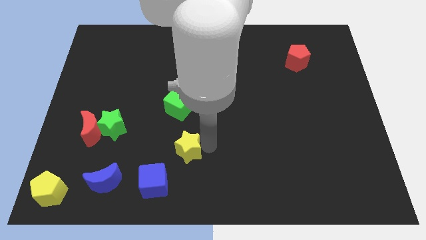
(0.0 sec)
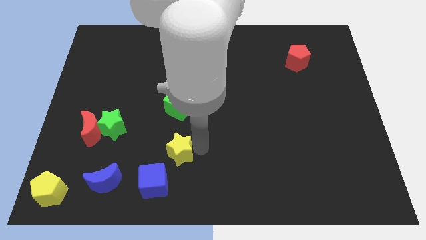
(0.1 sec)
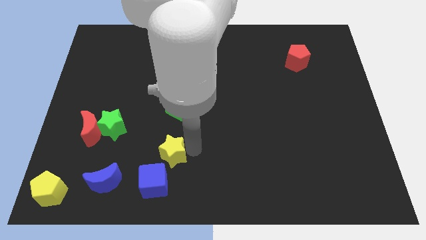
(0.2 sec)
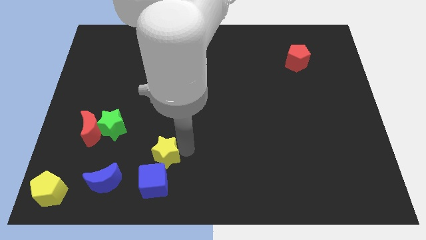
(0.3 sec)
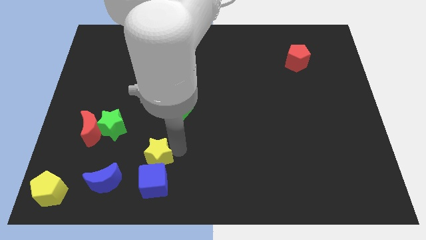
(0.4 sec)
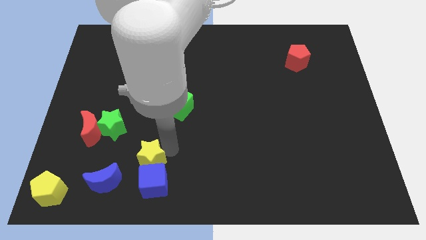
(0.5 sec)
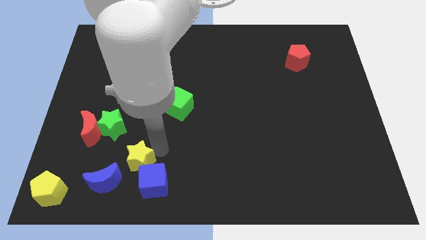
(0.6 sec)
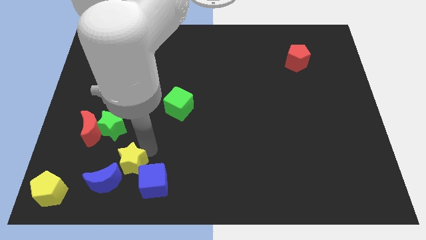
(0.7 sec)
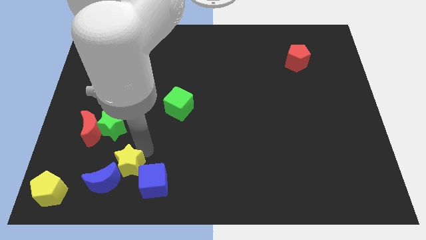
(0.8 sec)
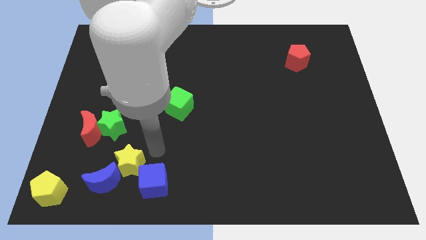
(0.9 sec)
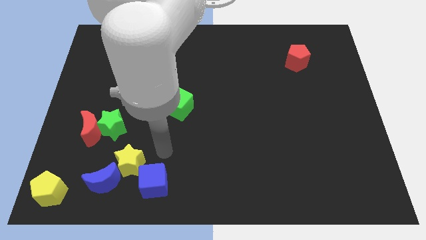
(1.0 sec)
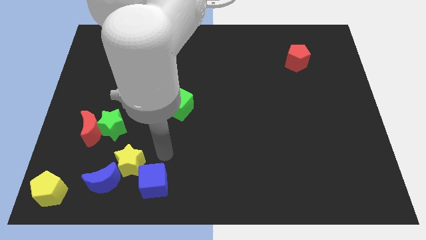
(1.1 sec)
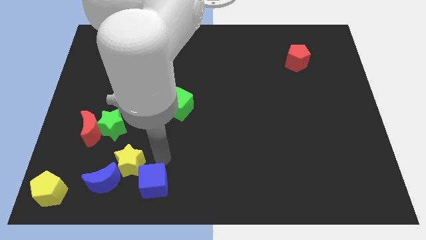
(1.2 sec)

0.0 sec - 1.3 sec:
move the yellow star into the blue crescent

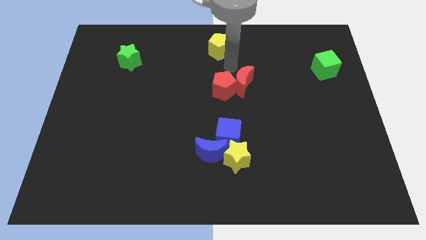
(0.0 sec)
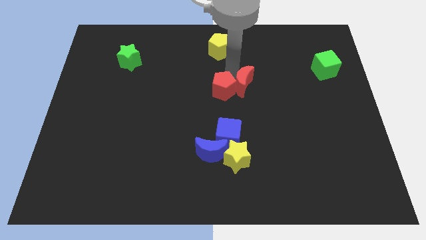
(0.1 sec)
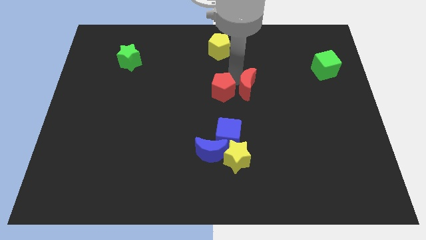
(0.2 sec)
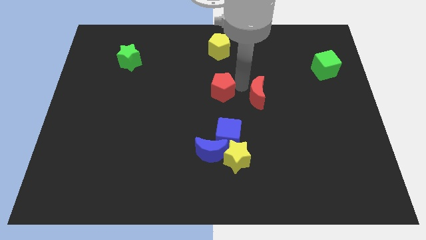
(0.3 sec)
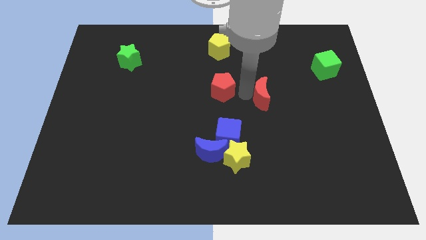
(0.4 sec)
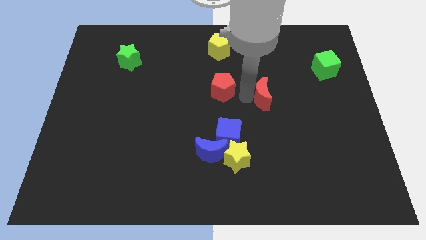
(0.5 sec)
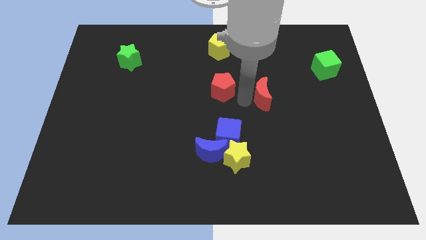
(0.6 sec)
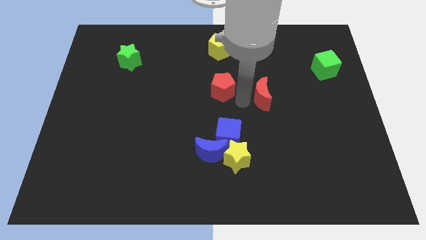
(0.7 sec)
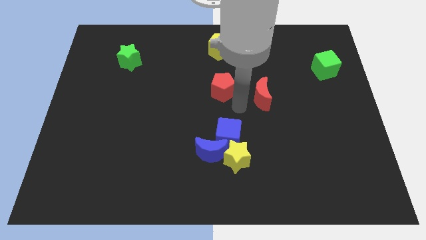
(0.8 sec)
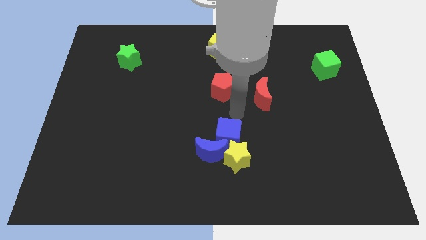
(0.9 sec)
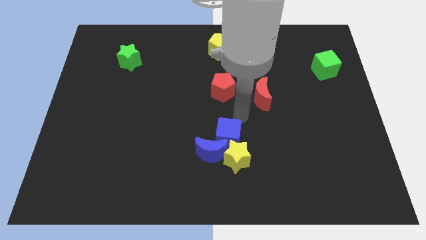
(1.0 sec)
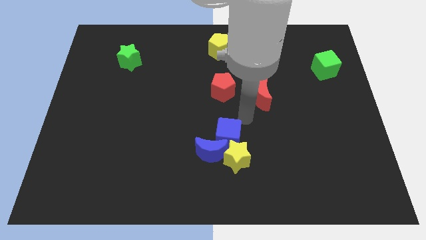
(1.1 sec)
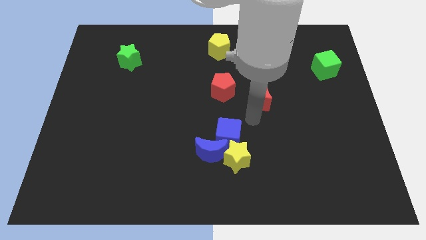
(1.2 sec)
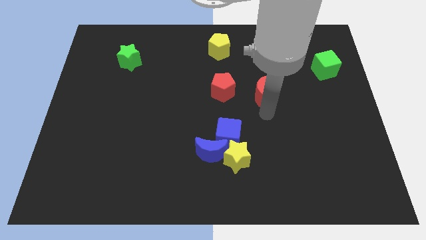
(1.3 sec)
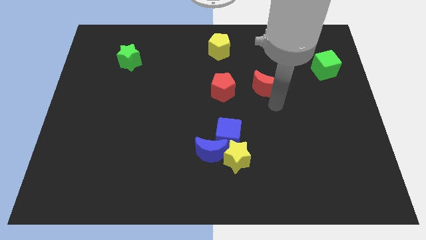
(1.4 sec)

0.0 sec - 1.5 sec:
push the red crescent to the right of the red pentagon

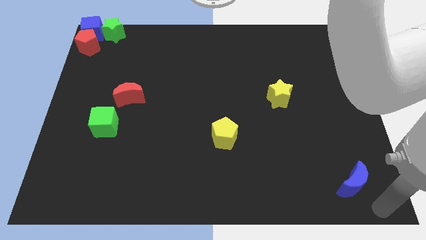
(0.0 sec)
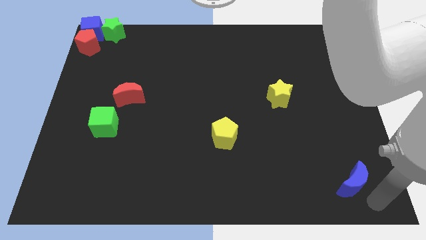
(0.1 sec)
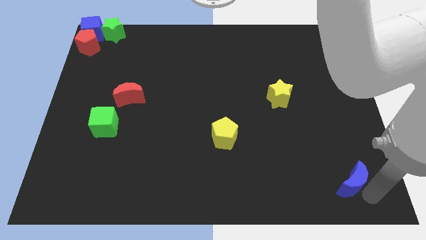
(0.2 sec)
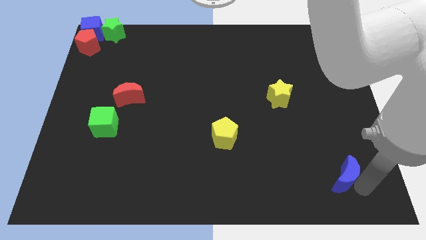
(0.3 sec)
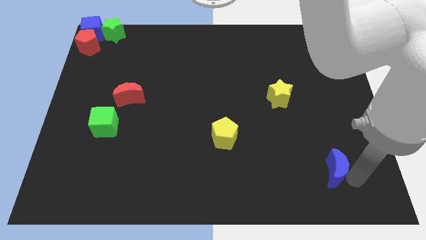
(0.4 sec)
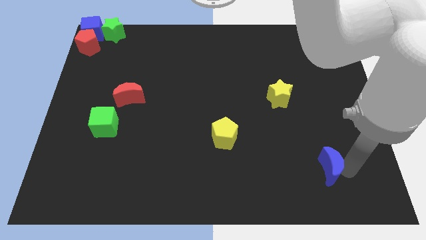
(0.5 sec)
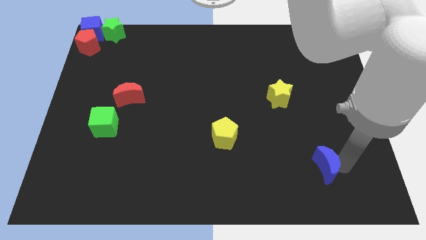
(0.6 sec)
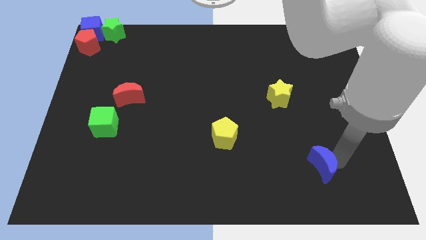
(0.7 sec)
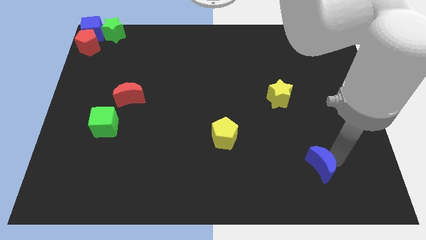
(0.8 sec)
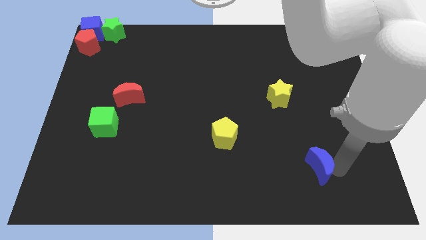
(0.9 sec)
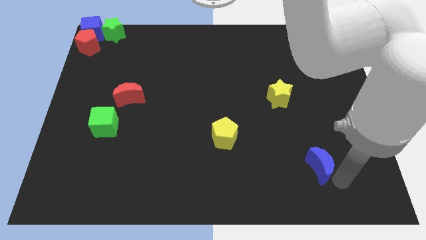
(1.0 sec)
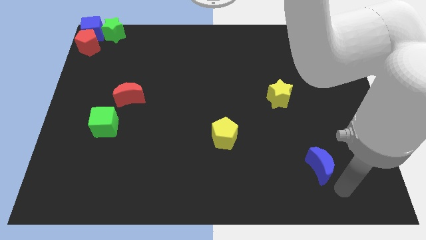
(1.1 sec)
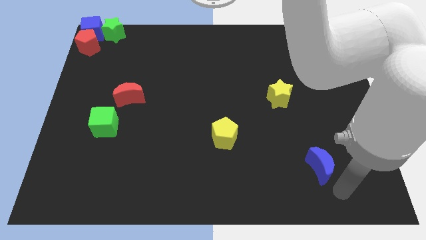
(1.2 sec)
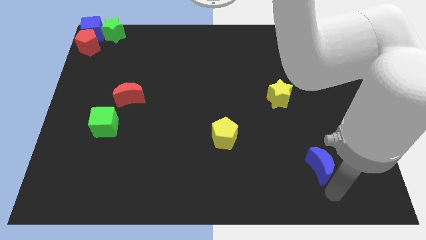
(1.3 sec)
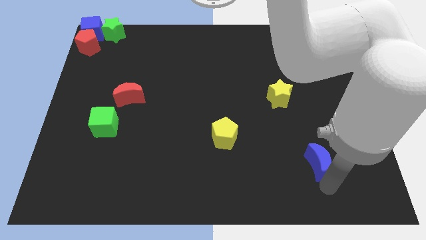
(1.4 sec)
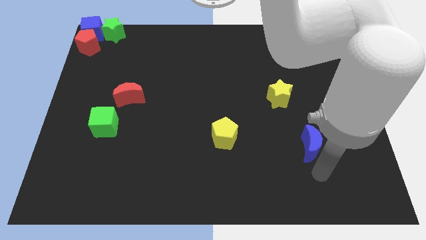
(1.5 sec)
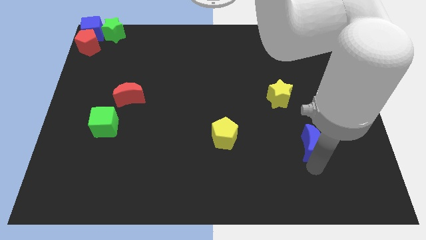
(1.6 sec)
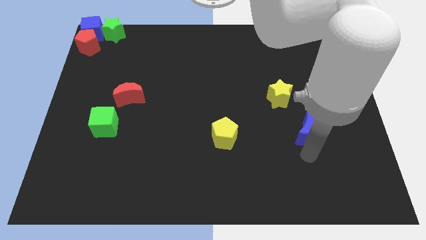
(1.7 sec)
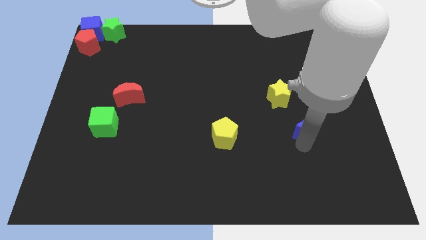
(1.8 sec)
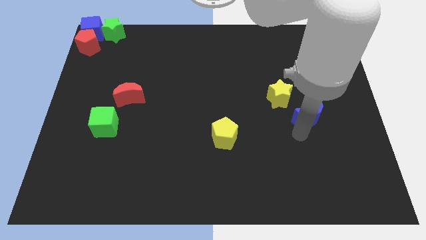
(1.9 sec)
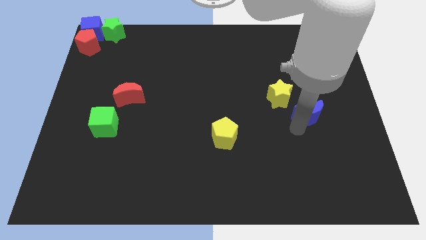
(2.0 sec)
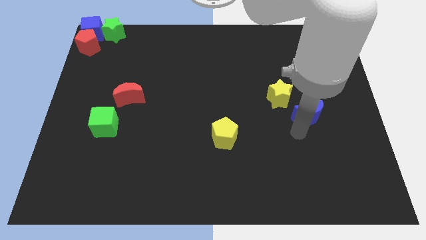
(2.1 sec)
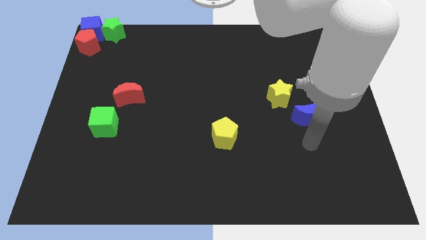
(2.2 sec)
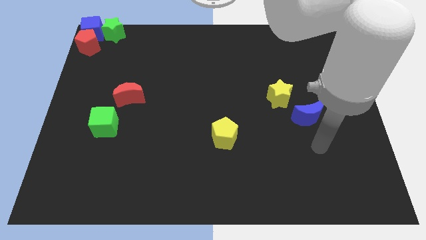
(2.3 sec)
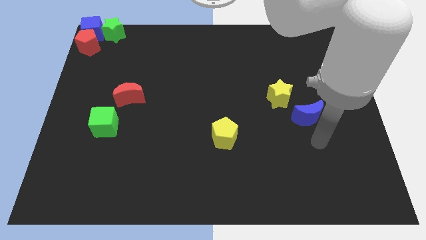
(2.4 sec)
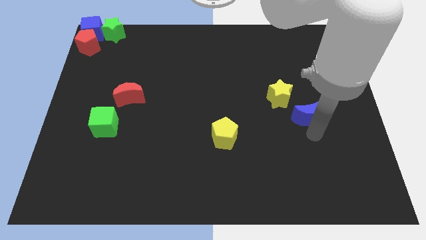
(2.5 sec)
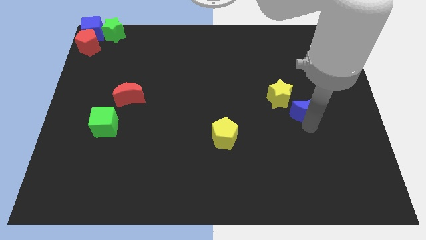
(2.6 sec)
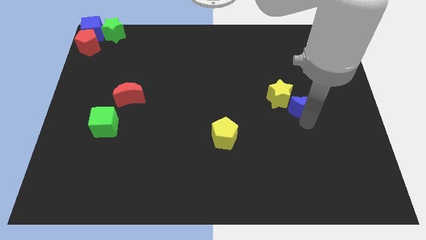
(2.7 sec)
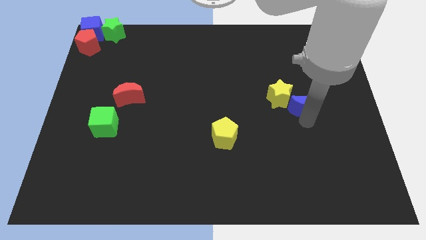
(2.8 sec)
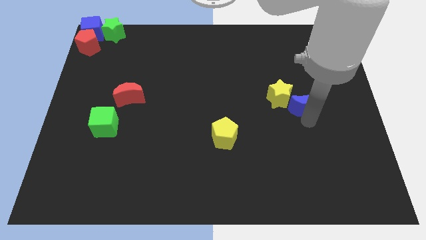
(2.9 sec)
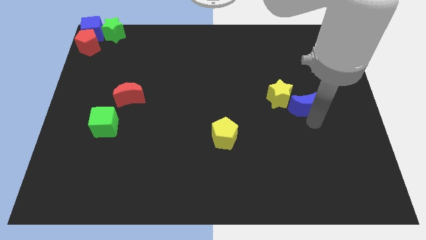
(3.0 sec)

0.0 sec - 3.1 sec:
slide blue moon to the bottom right of yellow star

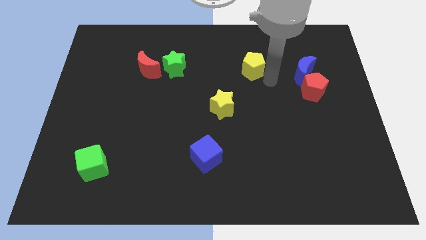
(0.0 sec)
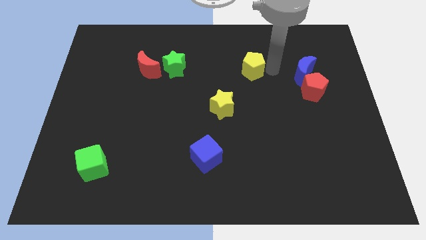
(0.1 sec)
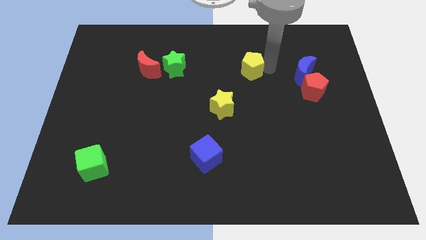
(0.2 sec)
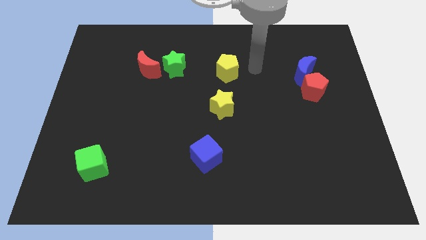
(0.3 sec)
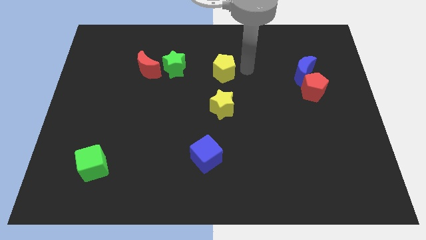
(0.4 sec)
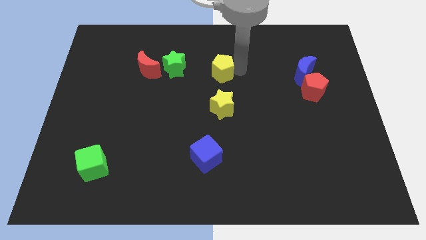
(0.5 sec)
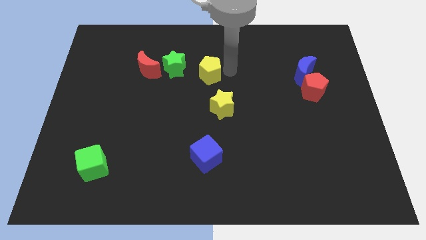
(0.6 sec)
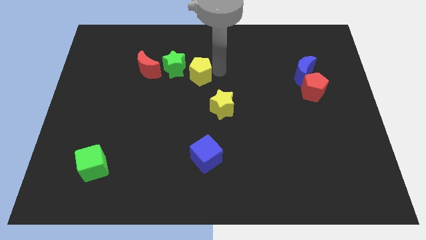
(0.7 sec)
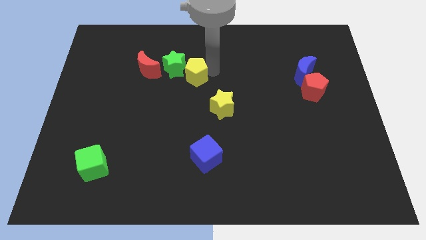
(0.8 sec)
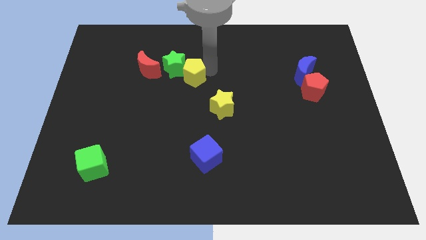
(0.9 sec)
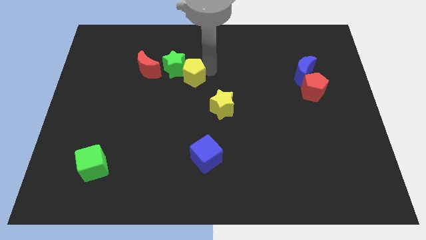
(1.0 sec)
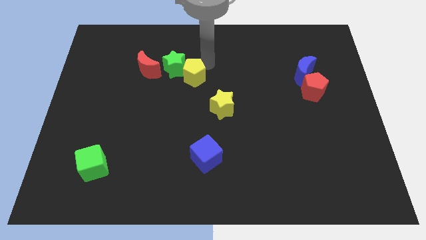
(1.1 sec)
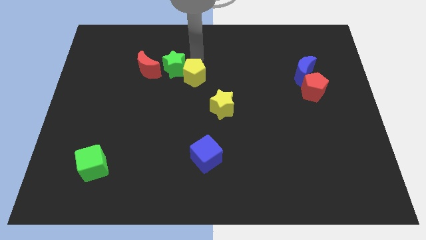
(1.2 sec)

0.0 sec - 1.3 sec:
move the yellow pentagon into the green star diagonally

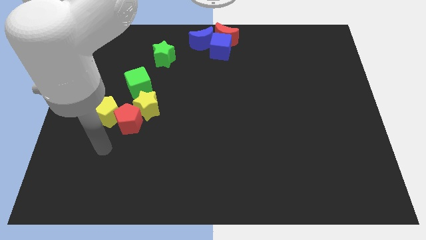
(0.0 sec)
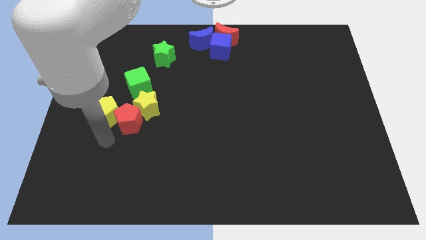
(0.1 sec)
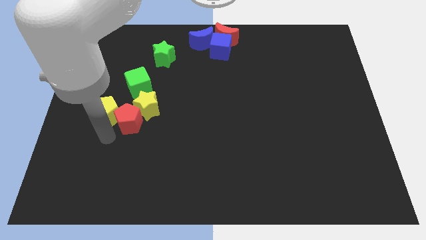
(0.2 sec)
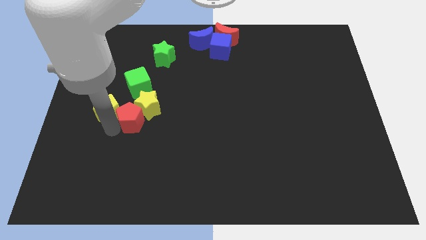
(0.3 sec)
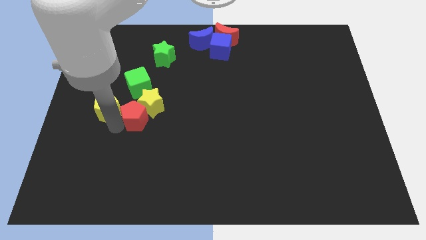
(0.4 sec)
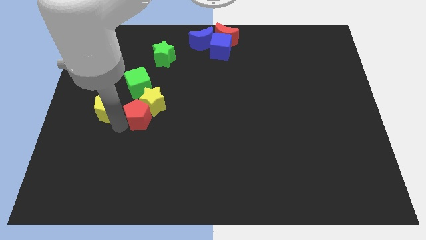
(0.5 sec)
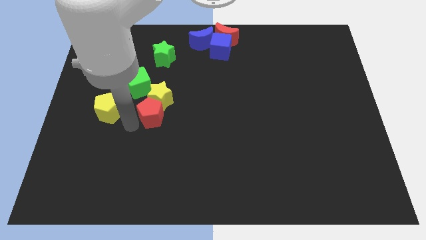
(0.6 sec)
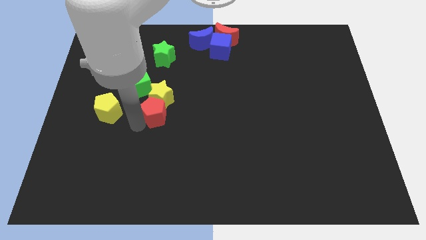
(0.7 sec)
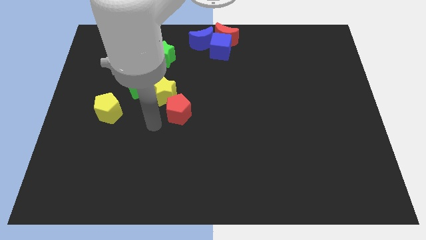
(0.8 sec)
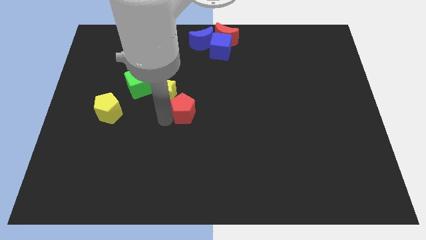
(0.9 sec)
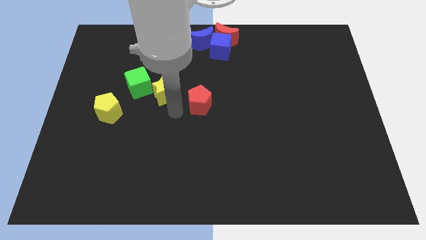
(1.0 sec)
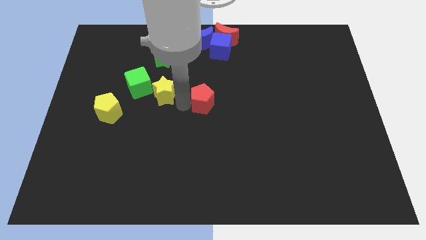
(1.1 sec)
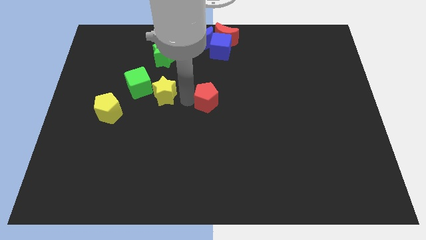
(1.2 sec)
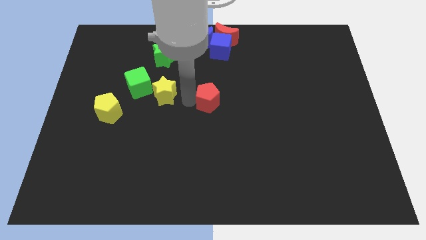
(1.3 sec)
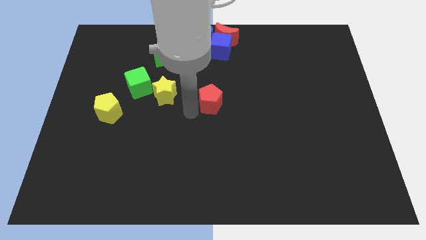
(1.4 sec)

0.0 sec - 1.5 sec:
move the red pentagon to the centre of the board

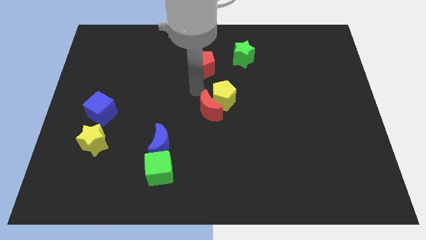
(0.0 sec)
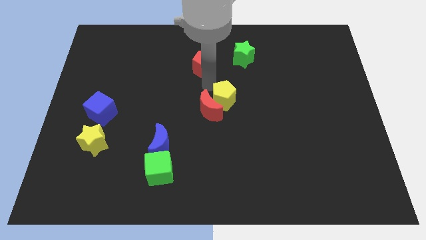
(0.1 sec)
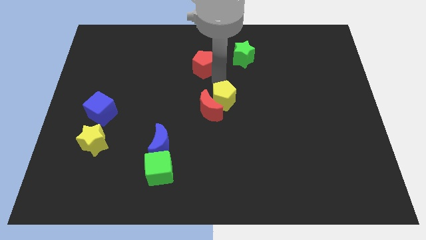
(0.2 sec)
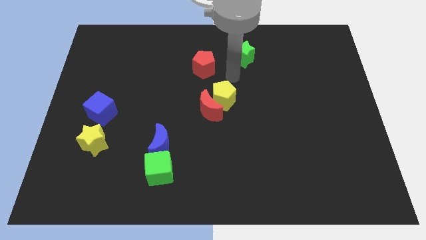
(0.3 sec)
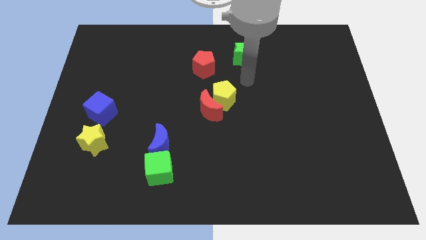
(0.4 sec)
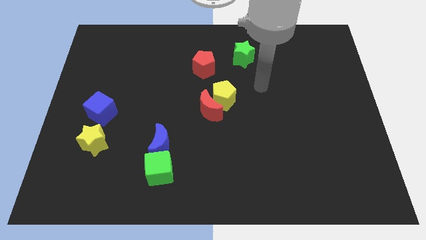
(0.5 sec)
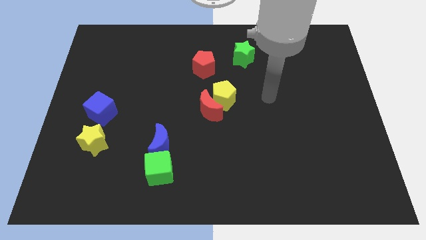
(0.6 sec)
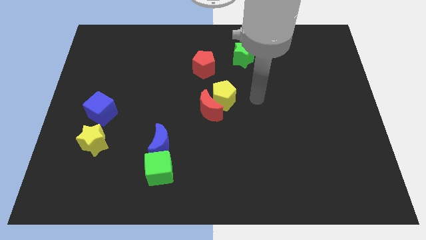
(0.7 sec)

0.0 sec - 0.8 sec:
move away from the red moon
